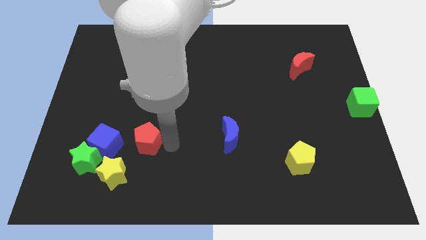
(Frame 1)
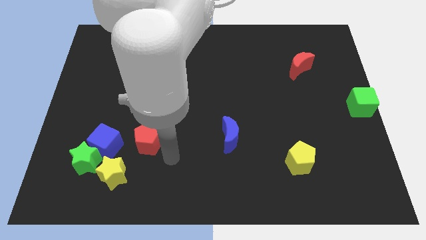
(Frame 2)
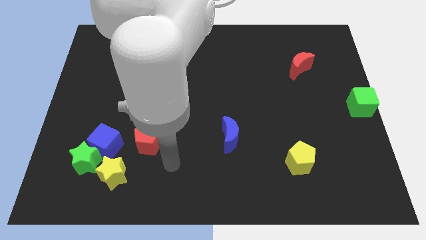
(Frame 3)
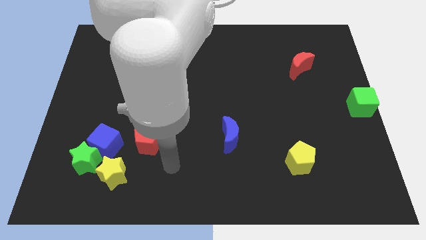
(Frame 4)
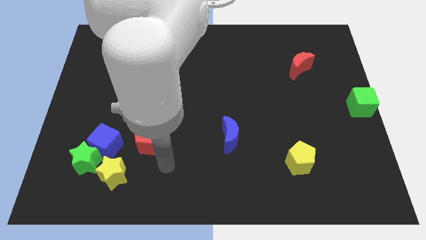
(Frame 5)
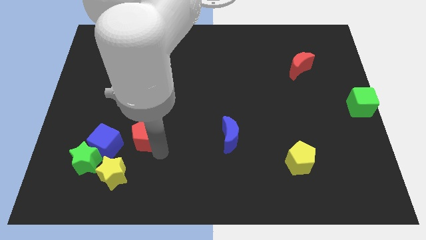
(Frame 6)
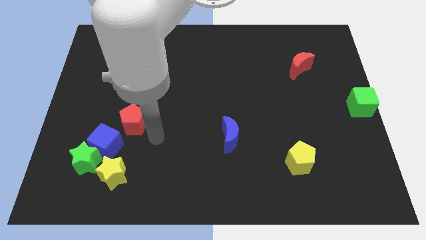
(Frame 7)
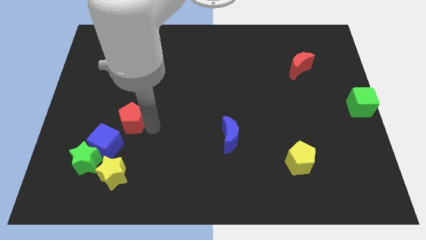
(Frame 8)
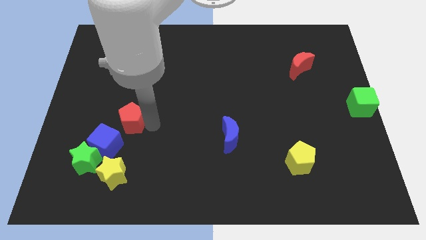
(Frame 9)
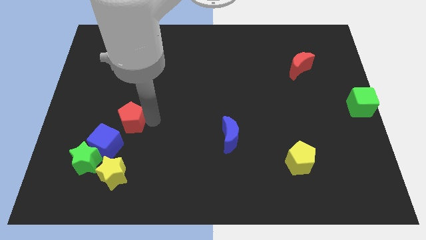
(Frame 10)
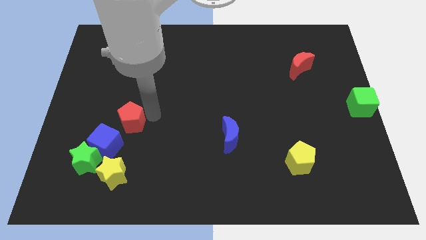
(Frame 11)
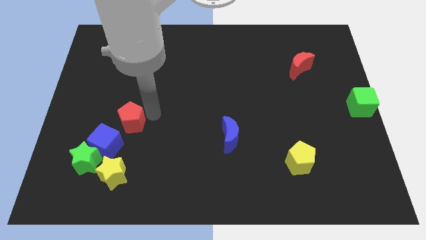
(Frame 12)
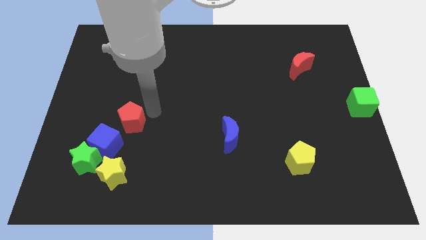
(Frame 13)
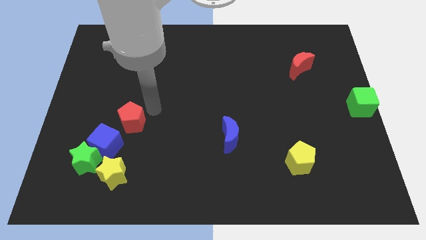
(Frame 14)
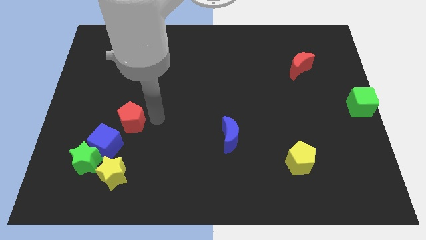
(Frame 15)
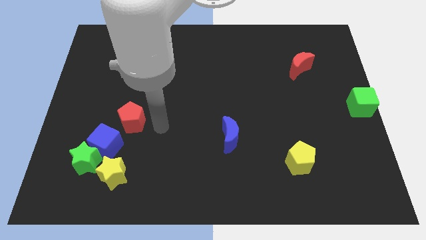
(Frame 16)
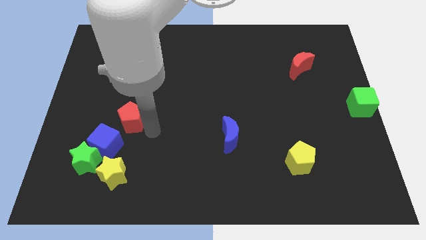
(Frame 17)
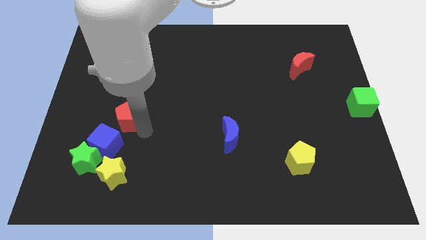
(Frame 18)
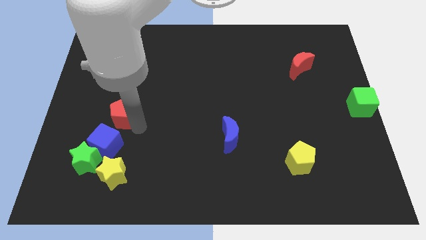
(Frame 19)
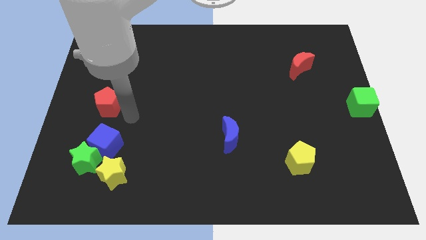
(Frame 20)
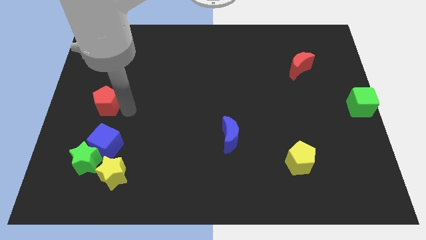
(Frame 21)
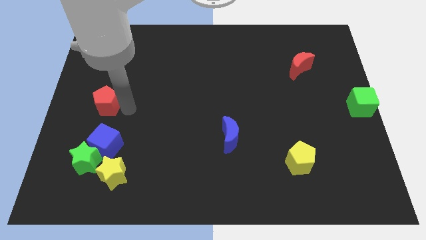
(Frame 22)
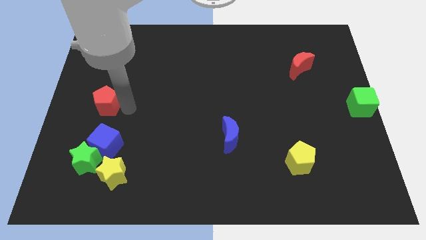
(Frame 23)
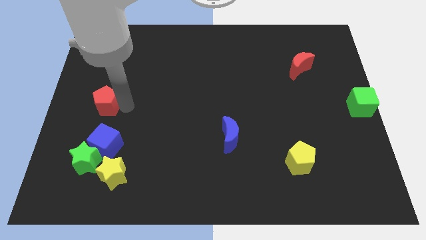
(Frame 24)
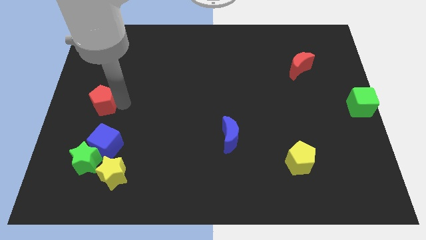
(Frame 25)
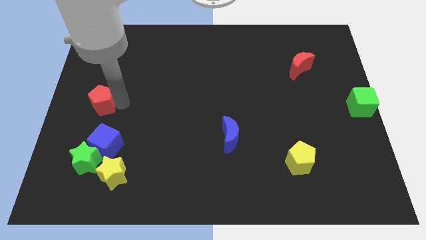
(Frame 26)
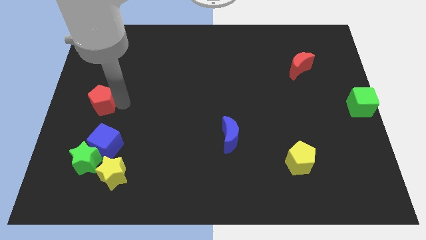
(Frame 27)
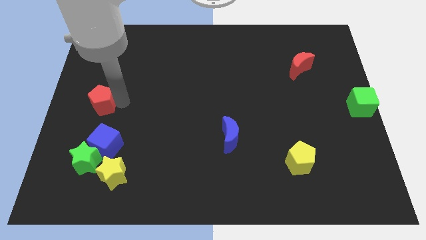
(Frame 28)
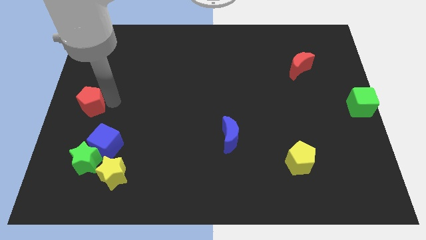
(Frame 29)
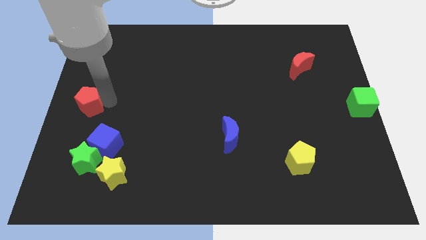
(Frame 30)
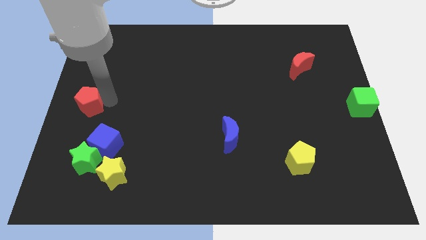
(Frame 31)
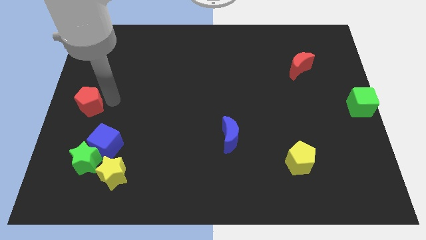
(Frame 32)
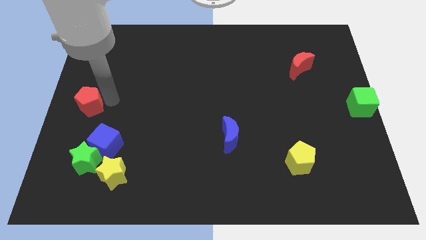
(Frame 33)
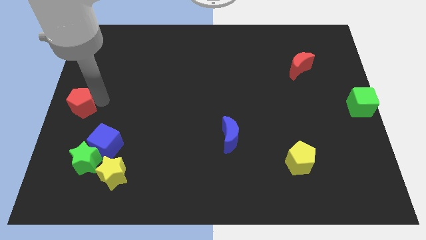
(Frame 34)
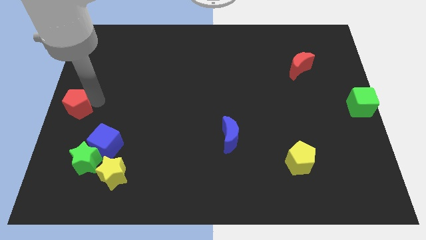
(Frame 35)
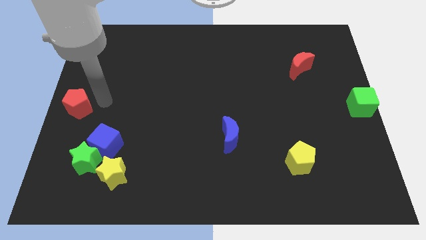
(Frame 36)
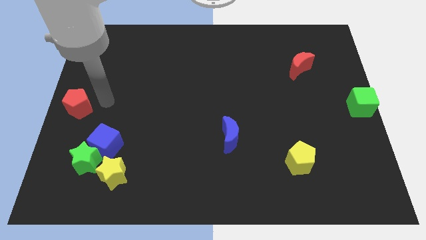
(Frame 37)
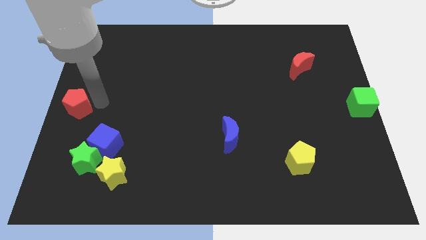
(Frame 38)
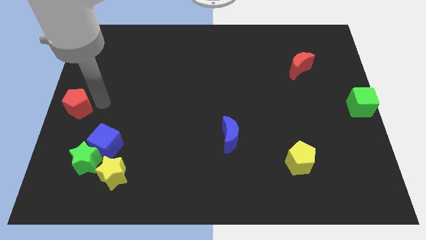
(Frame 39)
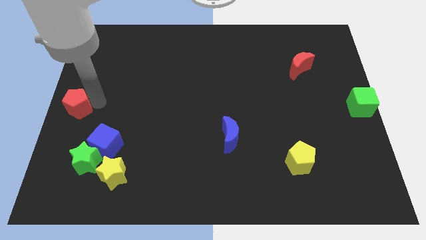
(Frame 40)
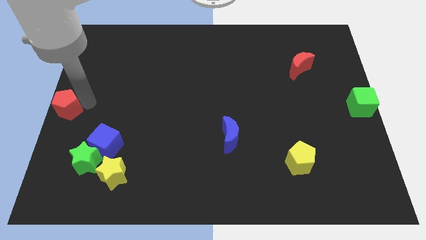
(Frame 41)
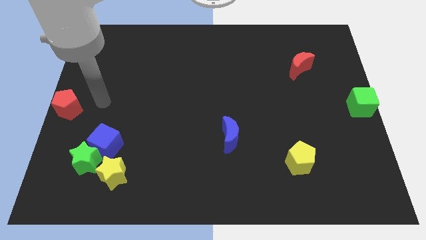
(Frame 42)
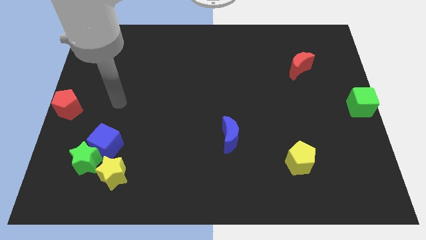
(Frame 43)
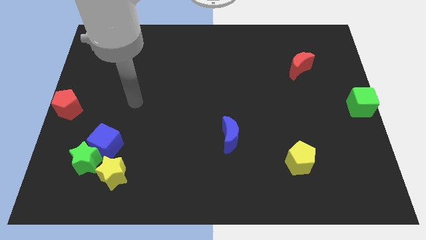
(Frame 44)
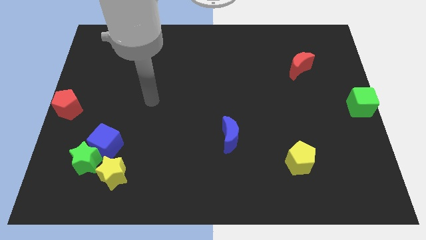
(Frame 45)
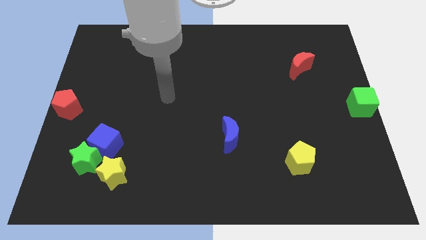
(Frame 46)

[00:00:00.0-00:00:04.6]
slide the red pentagon to the left center of the board

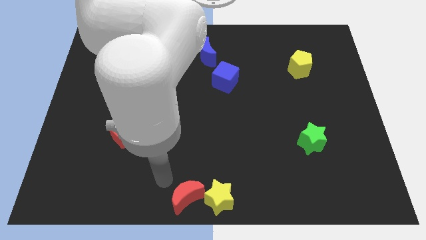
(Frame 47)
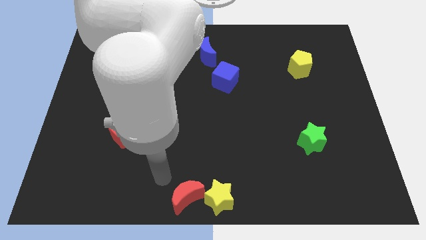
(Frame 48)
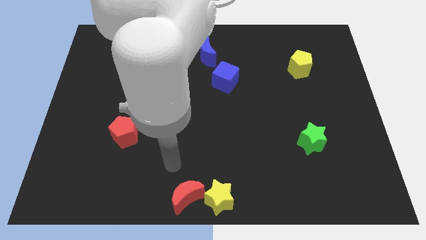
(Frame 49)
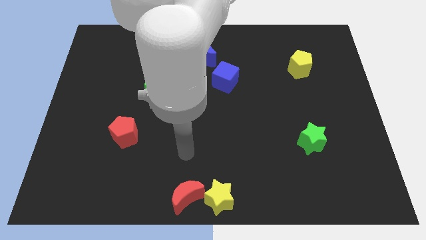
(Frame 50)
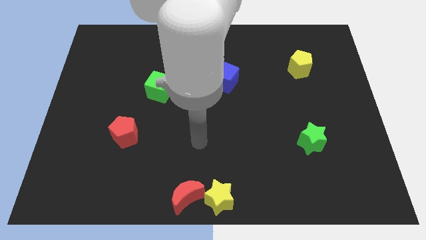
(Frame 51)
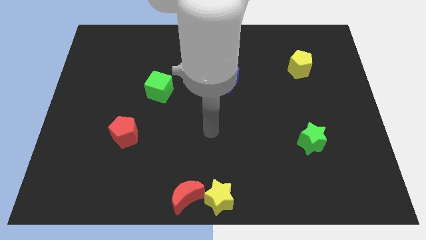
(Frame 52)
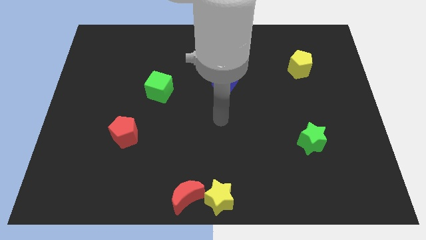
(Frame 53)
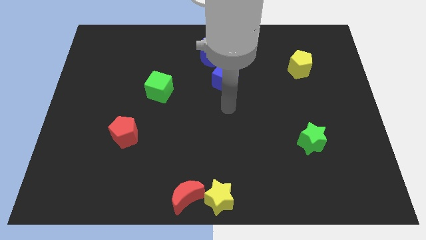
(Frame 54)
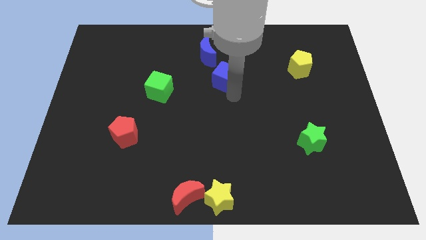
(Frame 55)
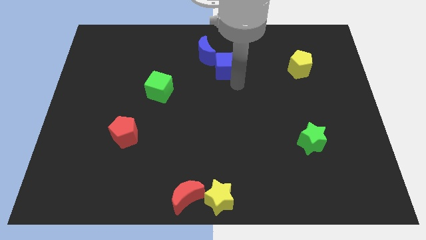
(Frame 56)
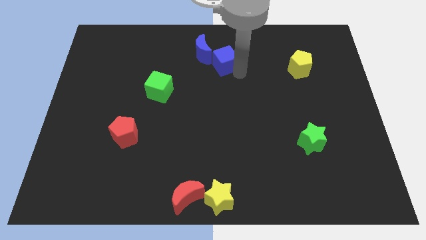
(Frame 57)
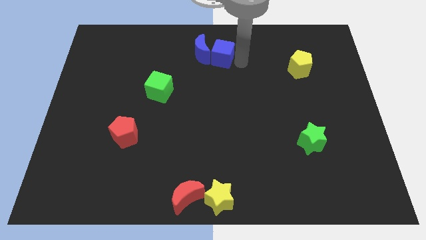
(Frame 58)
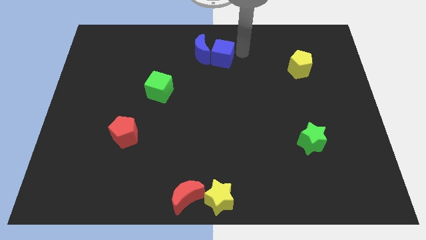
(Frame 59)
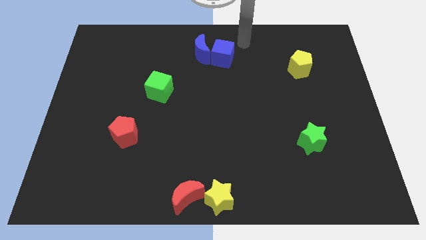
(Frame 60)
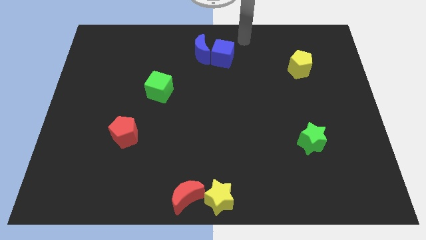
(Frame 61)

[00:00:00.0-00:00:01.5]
push the blue cube to the right side of the blue crescent

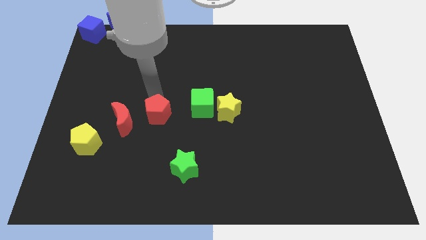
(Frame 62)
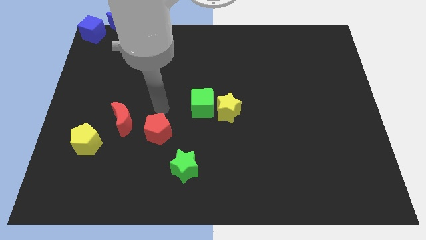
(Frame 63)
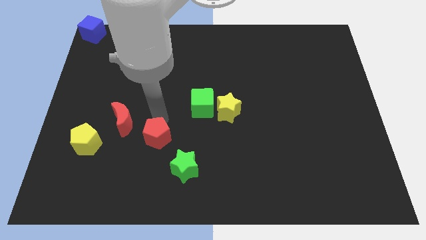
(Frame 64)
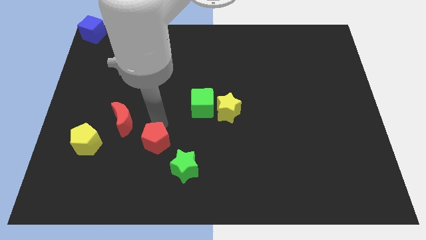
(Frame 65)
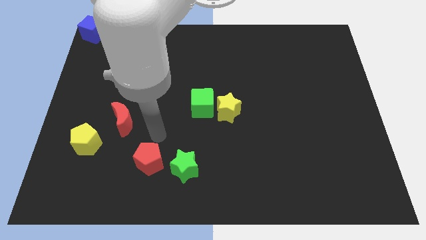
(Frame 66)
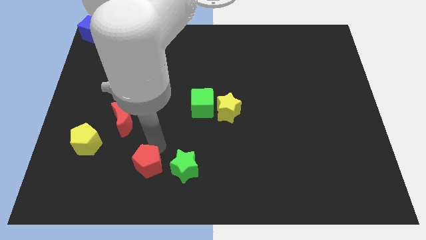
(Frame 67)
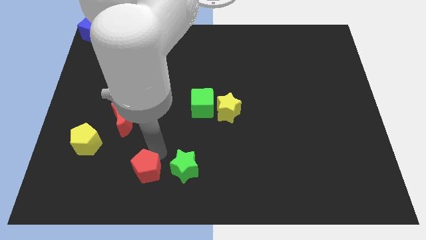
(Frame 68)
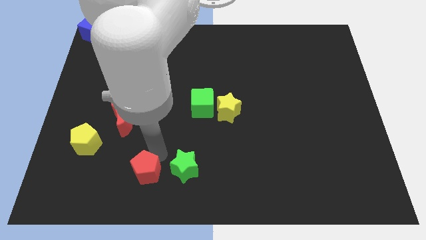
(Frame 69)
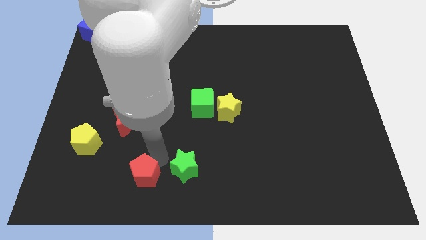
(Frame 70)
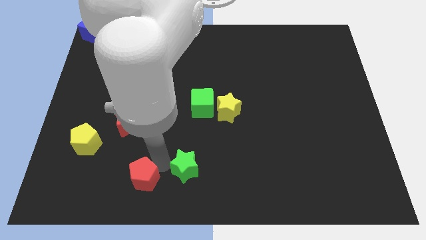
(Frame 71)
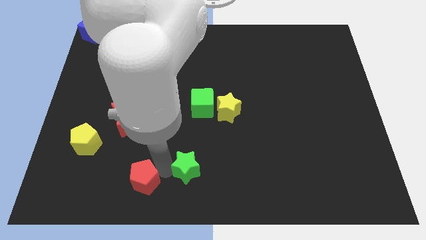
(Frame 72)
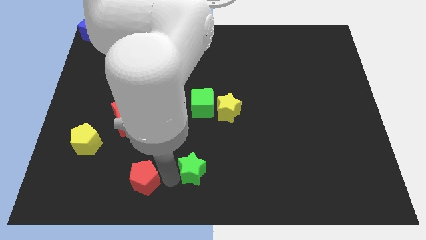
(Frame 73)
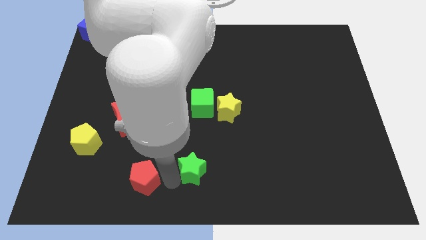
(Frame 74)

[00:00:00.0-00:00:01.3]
push the red pentagon to the left of the green star

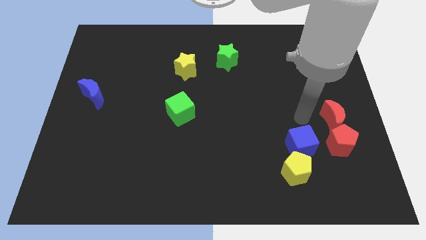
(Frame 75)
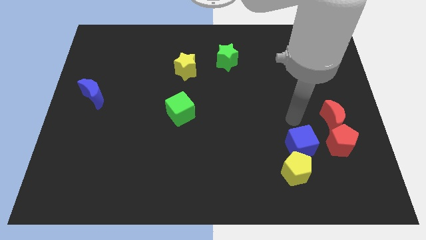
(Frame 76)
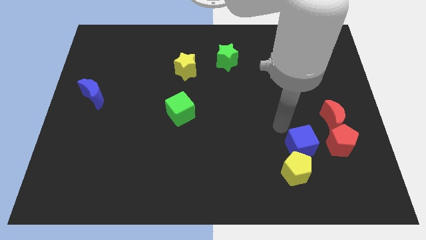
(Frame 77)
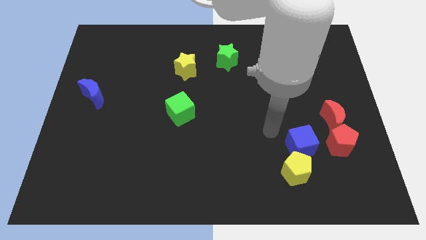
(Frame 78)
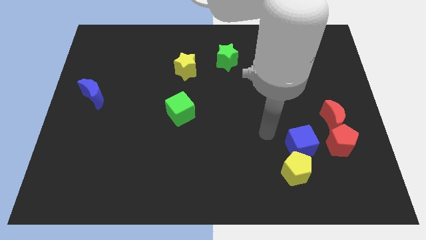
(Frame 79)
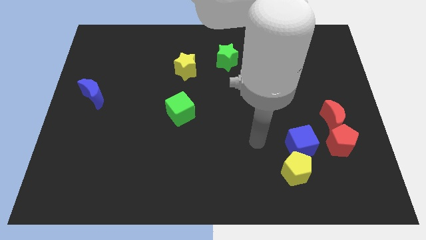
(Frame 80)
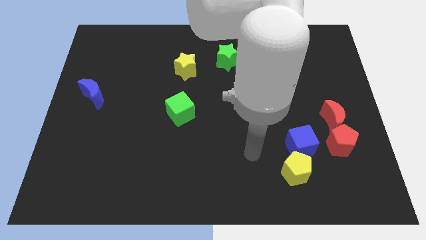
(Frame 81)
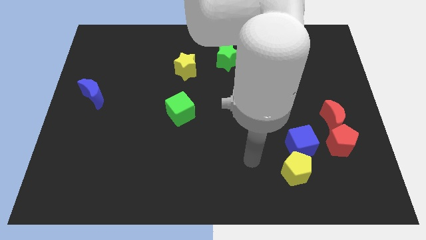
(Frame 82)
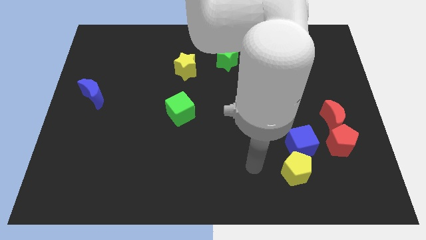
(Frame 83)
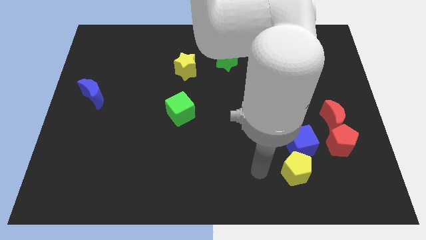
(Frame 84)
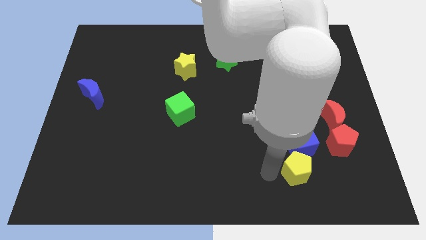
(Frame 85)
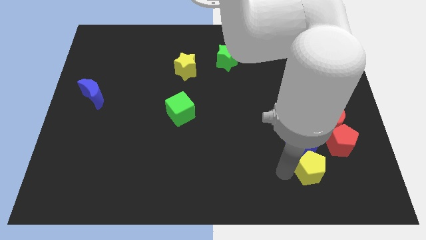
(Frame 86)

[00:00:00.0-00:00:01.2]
go to the left side of the yellow pentagon

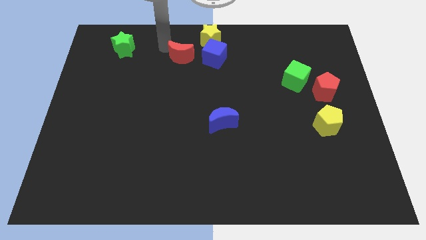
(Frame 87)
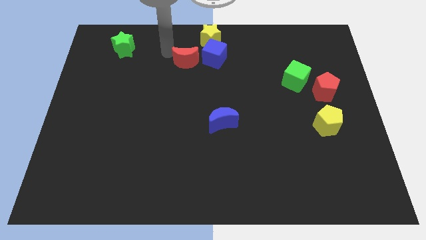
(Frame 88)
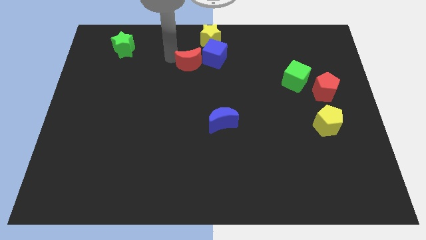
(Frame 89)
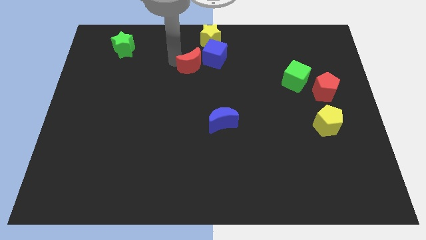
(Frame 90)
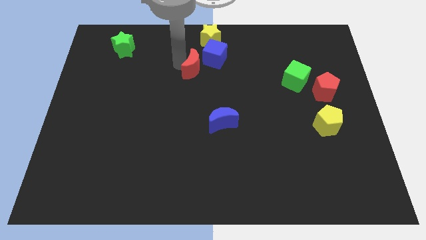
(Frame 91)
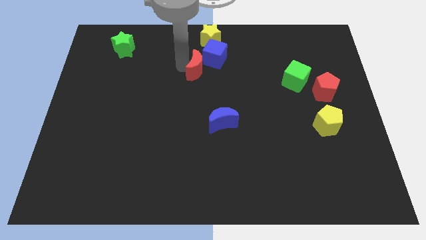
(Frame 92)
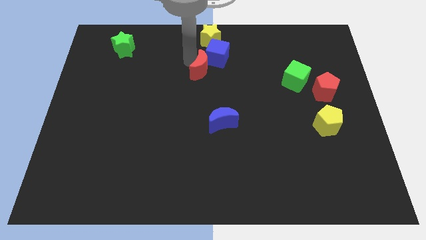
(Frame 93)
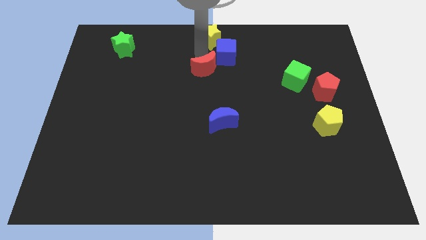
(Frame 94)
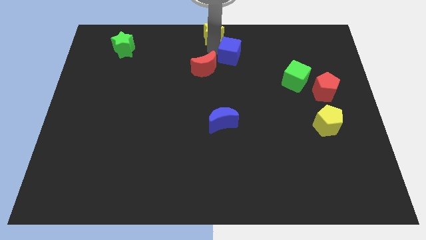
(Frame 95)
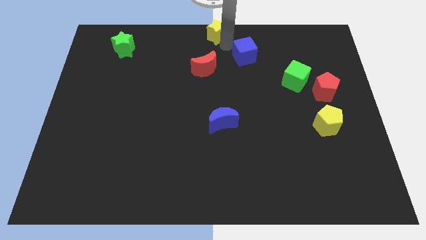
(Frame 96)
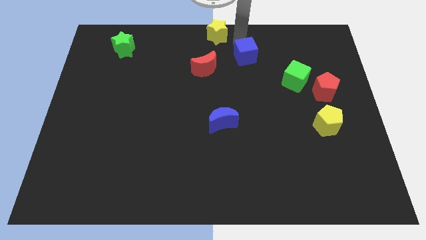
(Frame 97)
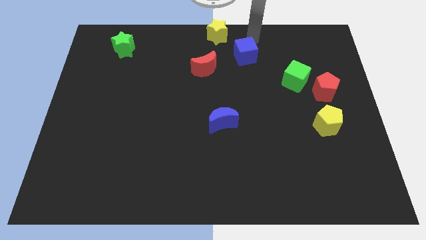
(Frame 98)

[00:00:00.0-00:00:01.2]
move the blue cube away from the yellow star
